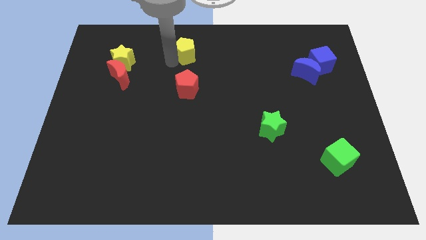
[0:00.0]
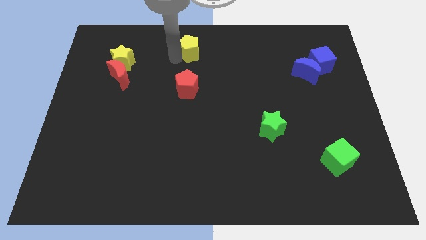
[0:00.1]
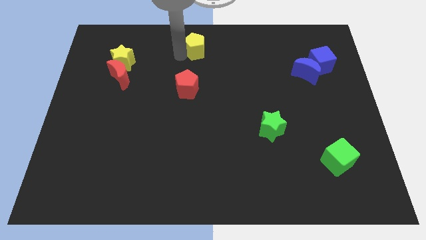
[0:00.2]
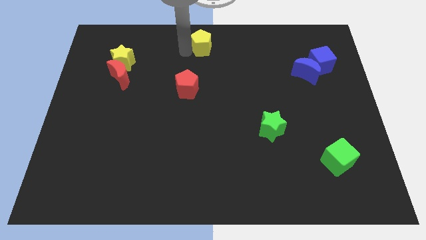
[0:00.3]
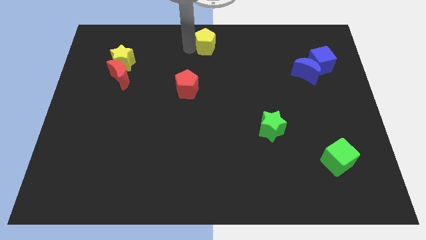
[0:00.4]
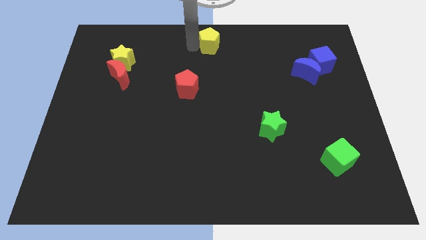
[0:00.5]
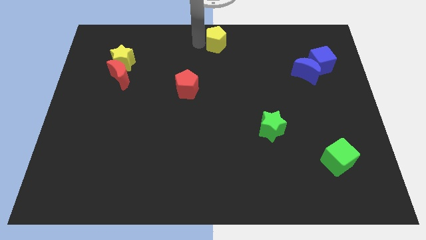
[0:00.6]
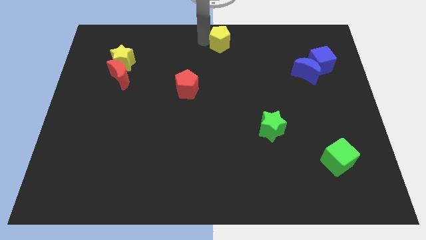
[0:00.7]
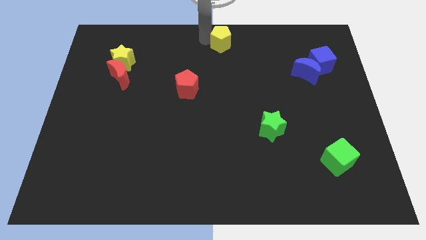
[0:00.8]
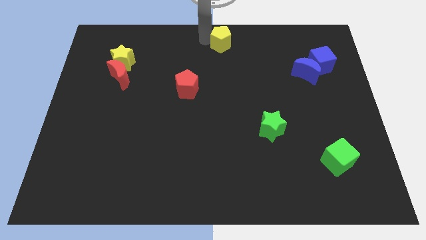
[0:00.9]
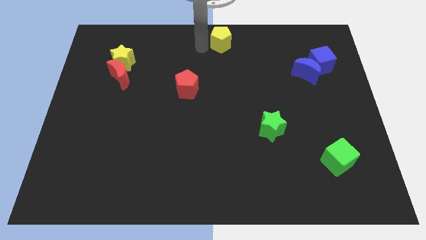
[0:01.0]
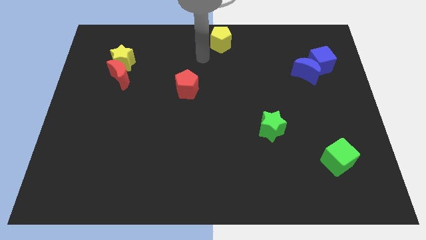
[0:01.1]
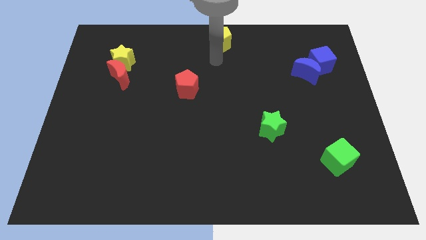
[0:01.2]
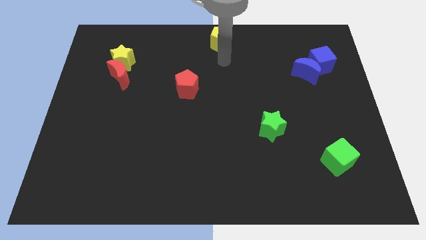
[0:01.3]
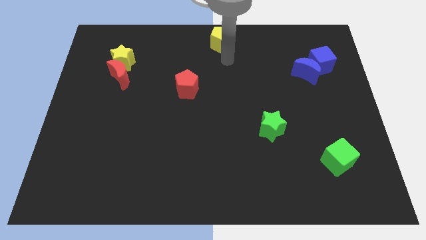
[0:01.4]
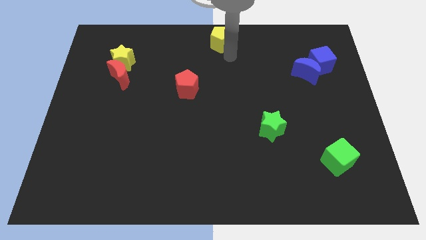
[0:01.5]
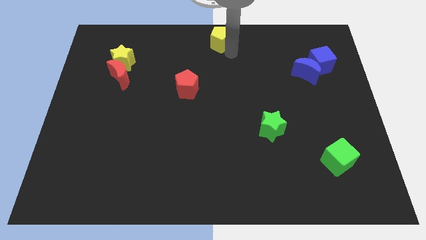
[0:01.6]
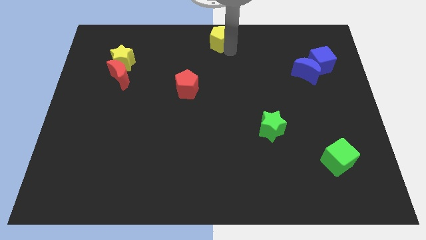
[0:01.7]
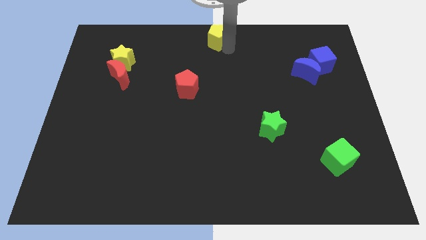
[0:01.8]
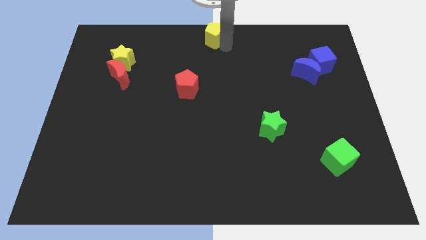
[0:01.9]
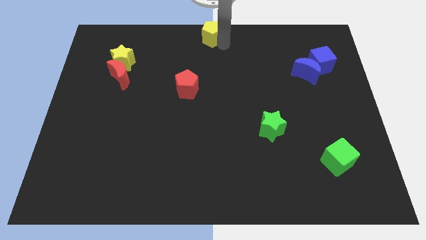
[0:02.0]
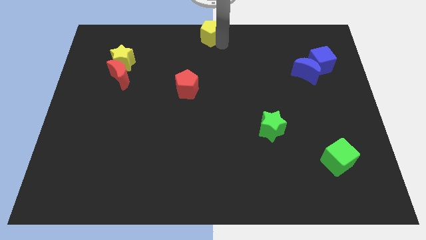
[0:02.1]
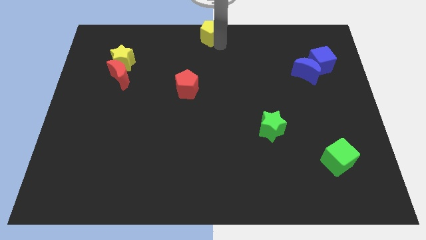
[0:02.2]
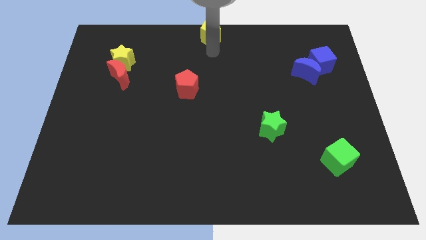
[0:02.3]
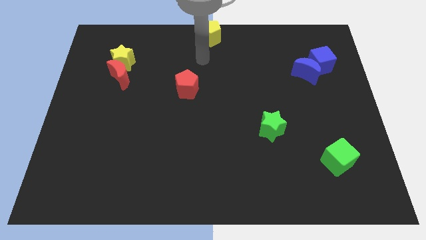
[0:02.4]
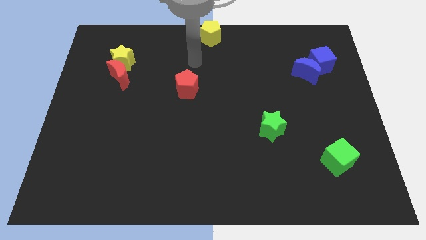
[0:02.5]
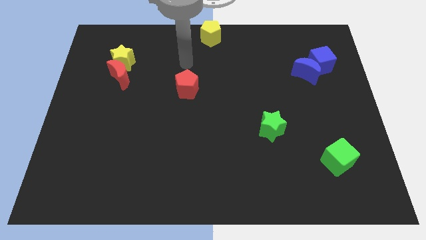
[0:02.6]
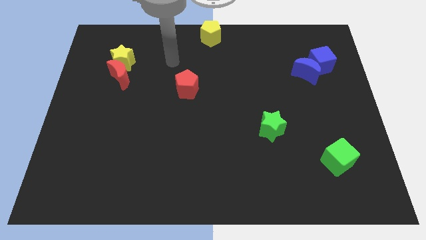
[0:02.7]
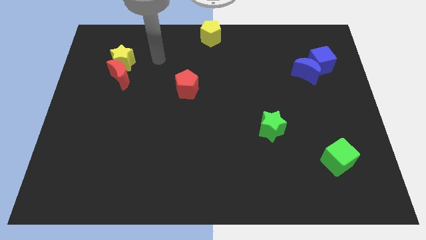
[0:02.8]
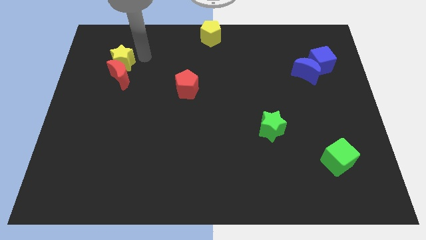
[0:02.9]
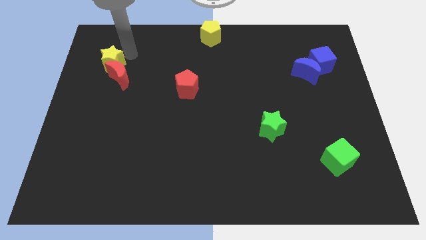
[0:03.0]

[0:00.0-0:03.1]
tap yellow star

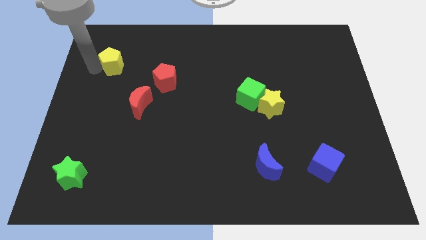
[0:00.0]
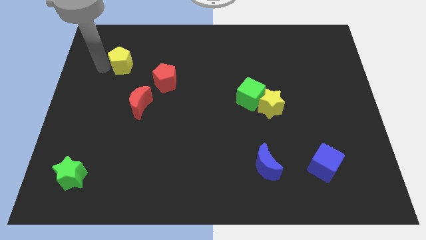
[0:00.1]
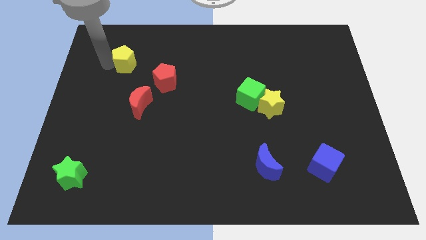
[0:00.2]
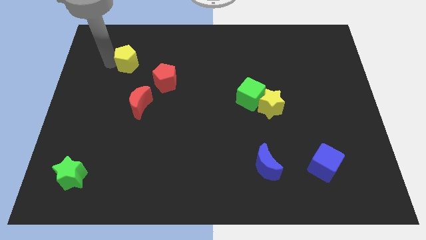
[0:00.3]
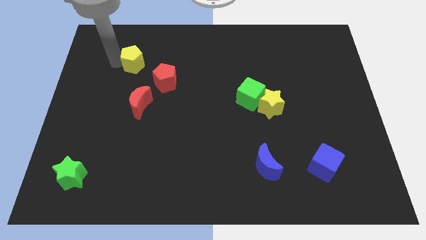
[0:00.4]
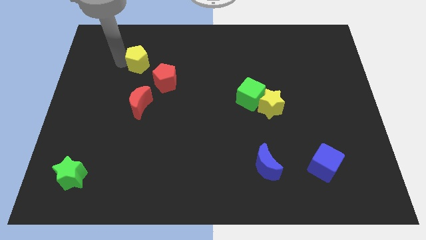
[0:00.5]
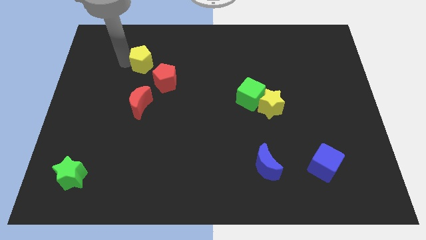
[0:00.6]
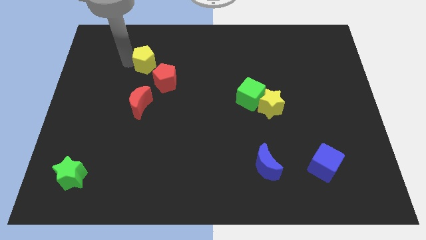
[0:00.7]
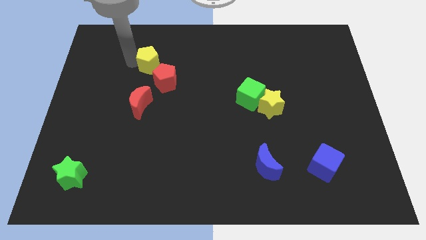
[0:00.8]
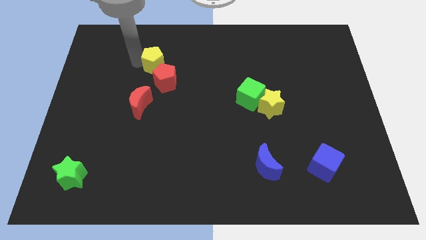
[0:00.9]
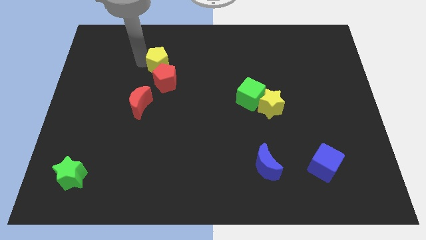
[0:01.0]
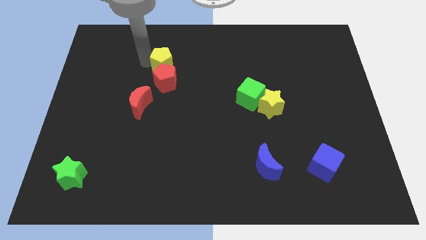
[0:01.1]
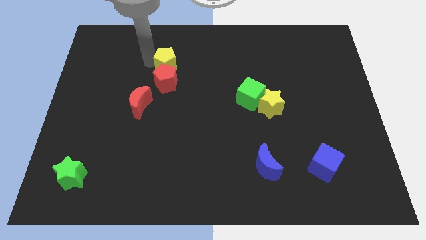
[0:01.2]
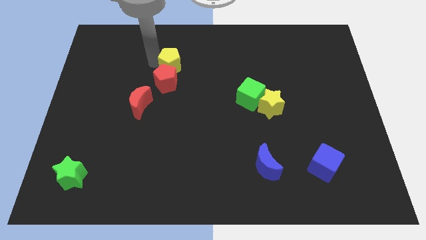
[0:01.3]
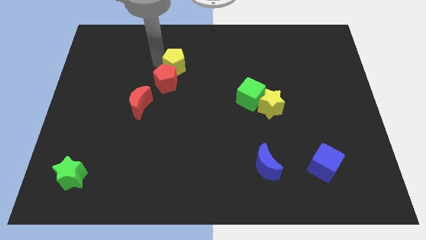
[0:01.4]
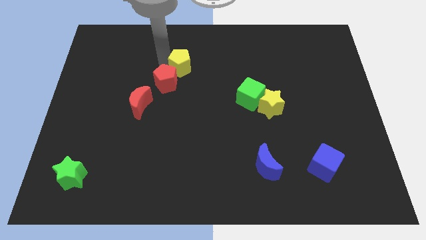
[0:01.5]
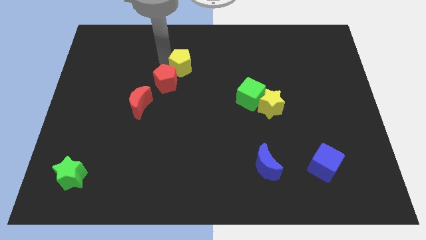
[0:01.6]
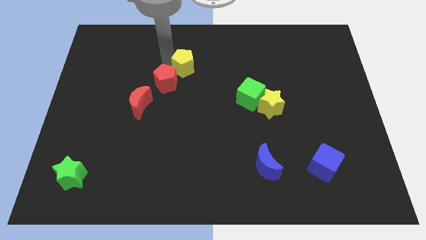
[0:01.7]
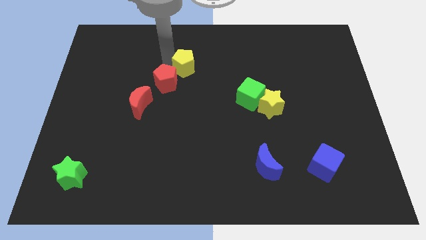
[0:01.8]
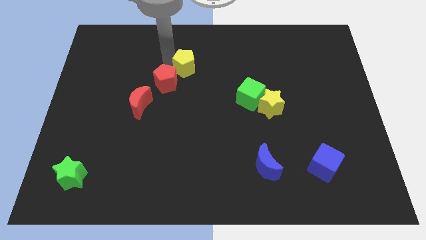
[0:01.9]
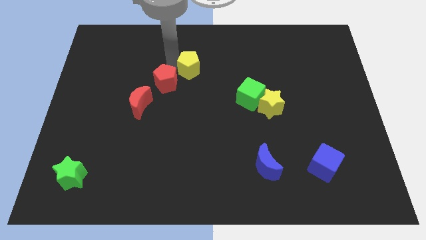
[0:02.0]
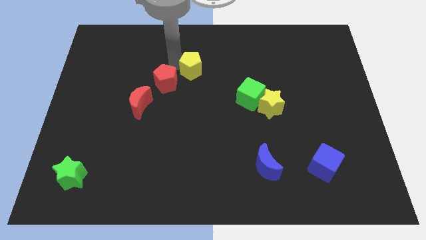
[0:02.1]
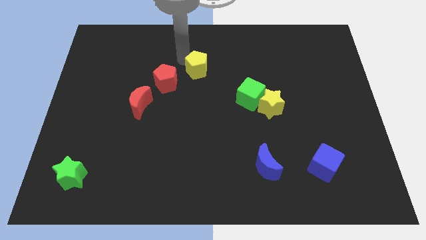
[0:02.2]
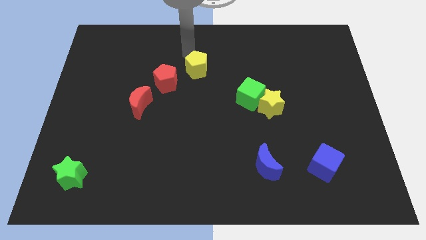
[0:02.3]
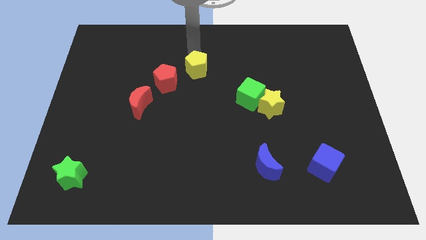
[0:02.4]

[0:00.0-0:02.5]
push the yellow pentagon to the top right of the red pentagon

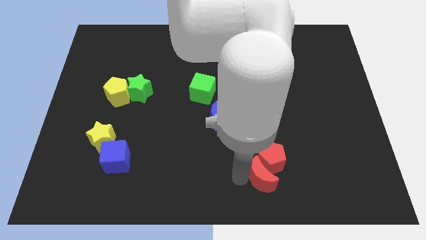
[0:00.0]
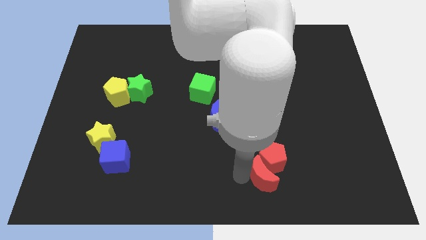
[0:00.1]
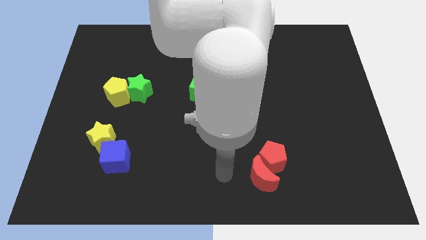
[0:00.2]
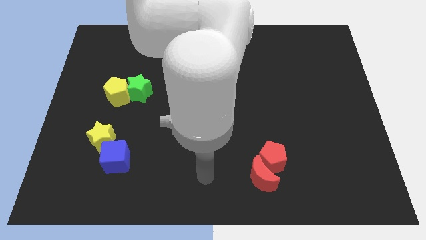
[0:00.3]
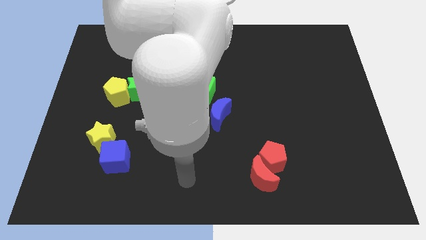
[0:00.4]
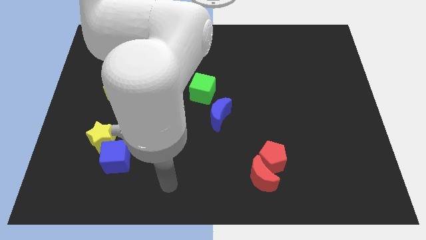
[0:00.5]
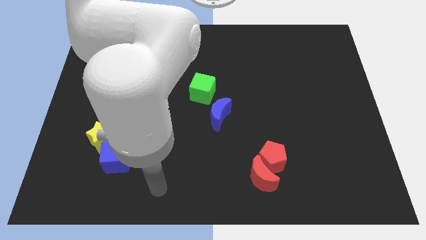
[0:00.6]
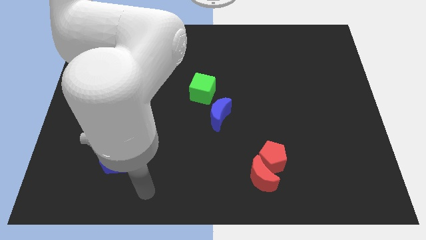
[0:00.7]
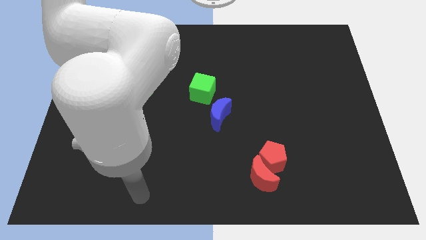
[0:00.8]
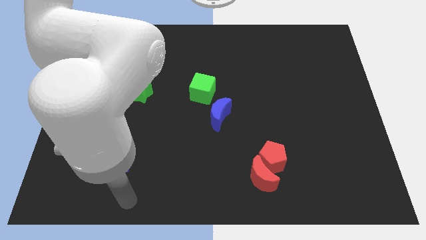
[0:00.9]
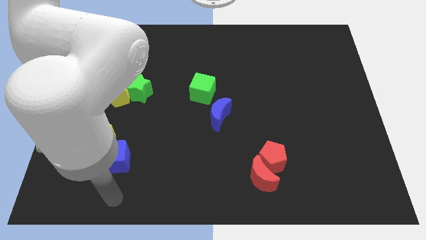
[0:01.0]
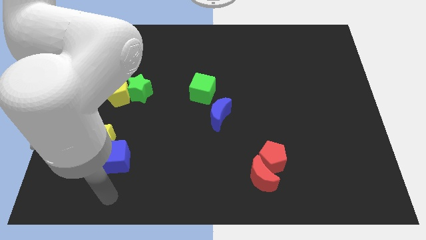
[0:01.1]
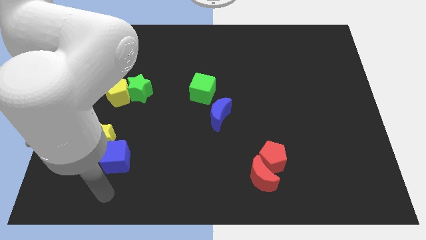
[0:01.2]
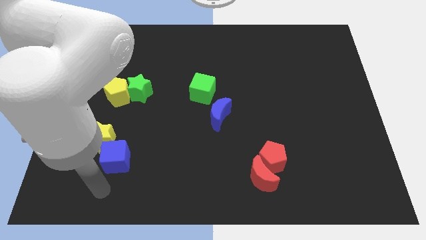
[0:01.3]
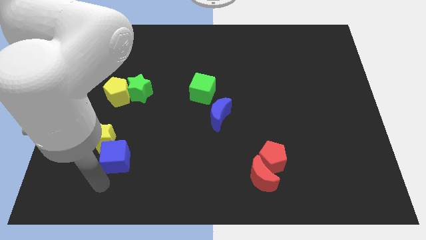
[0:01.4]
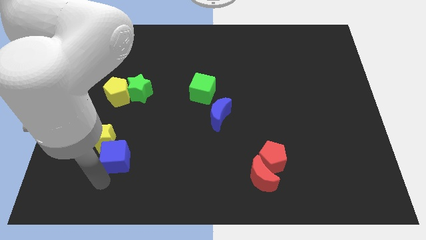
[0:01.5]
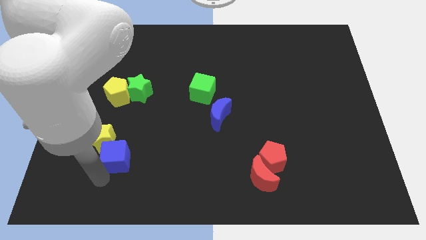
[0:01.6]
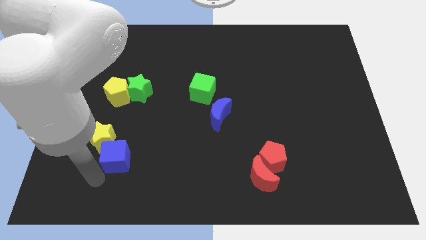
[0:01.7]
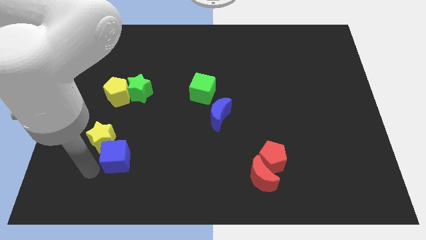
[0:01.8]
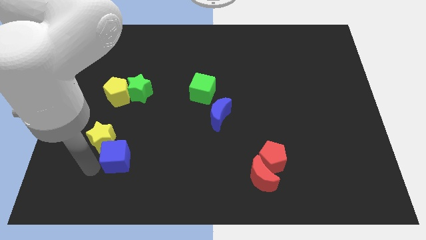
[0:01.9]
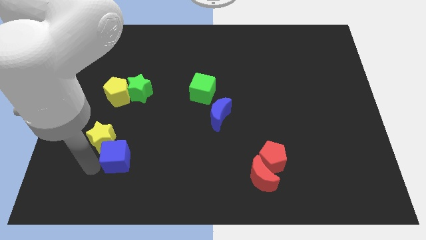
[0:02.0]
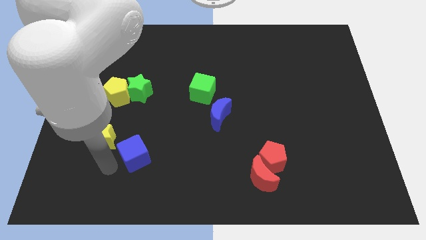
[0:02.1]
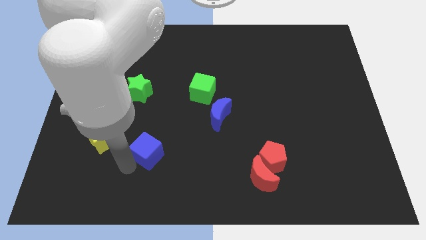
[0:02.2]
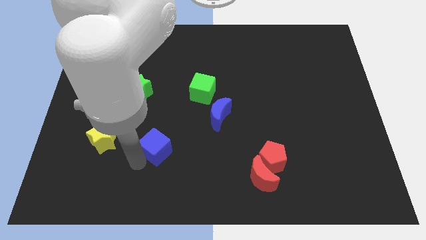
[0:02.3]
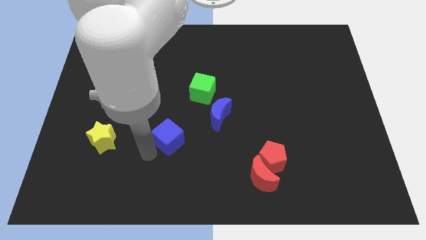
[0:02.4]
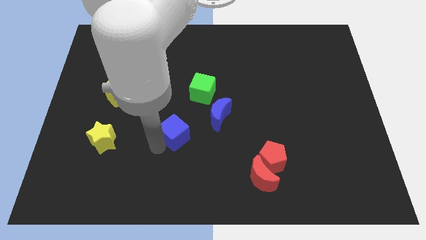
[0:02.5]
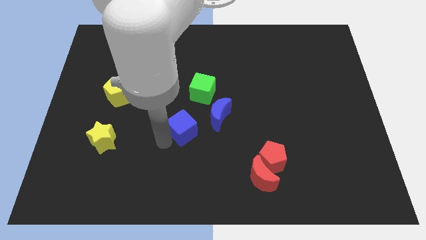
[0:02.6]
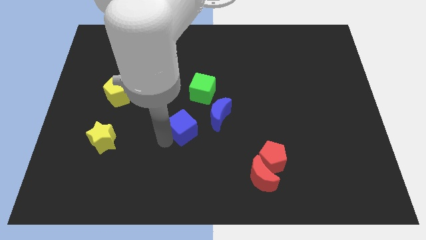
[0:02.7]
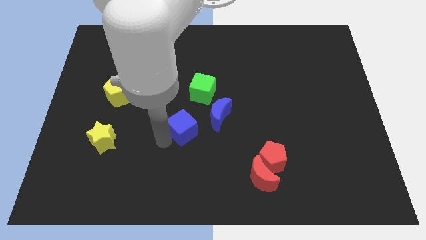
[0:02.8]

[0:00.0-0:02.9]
move blue cube upwards

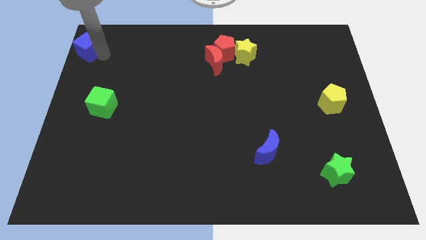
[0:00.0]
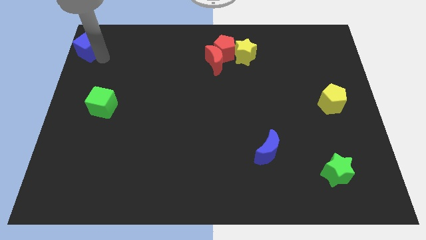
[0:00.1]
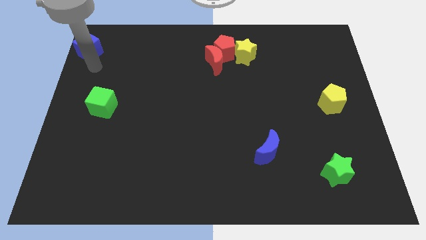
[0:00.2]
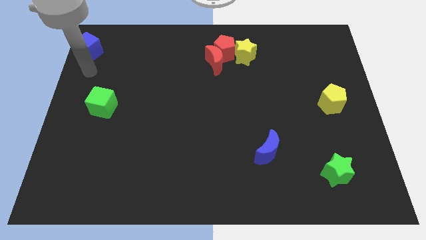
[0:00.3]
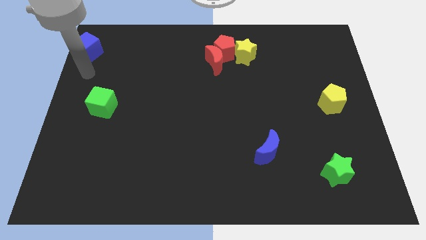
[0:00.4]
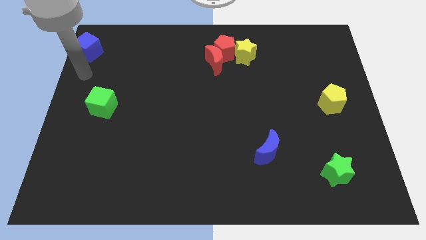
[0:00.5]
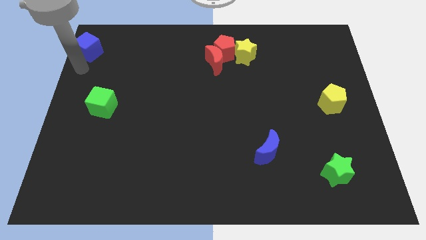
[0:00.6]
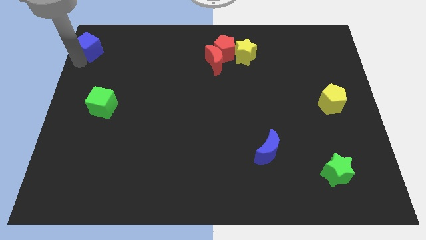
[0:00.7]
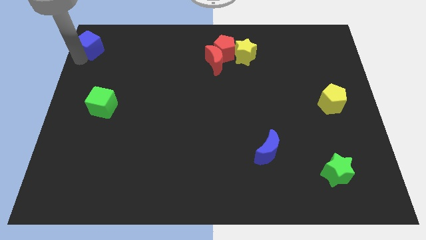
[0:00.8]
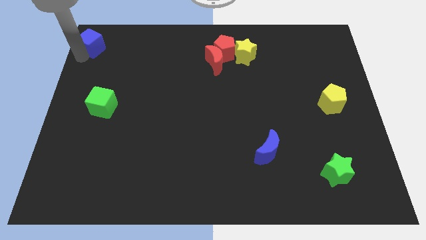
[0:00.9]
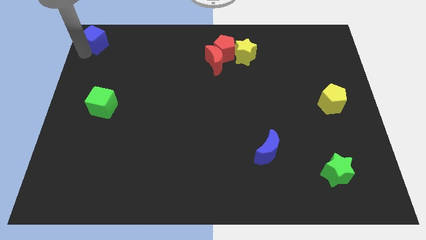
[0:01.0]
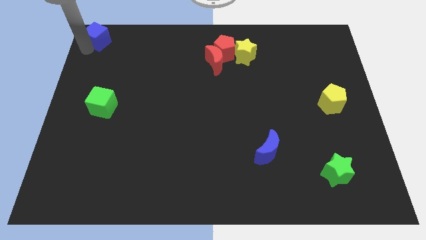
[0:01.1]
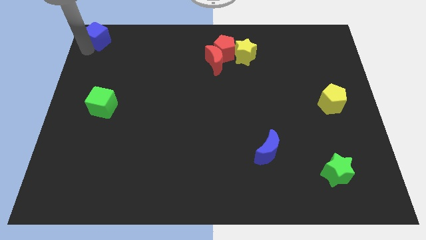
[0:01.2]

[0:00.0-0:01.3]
slide blue cube to top left corner
